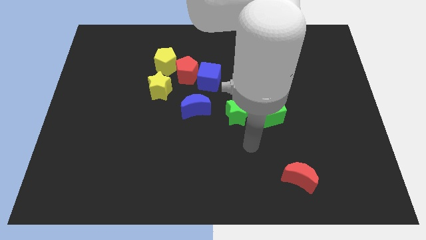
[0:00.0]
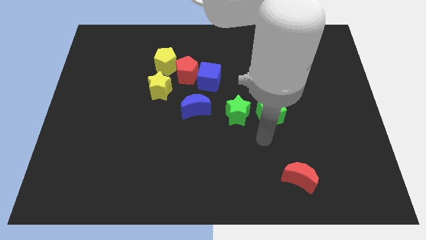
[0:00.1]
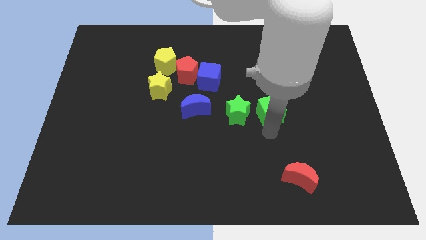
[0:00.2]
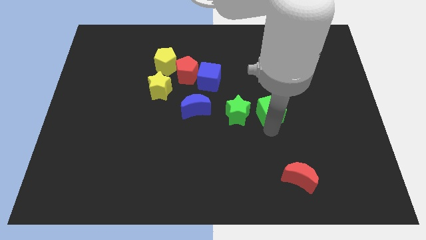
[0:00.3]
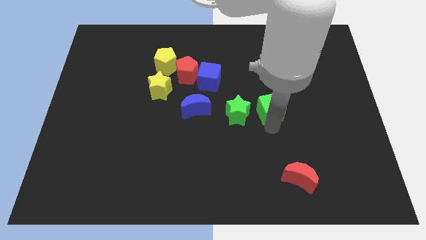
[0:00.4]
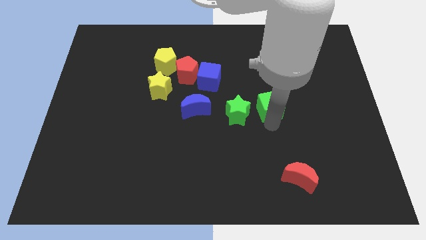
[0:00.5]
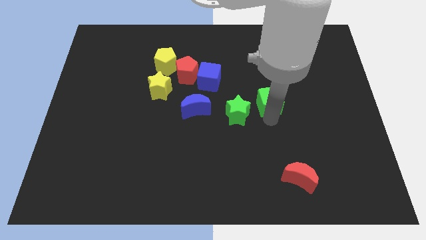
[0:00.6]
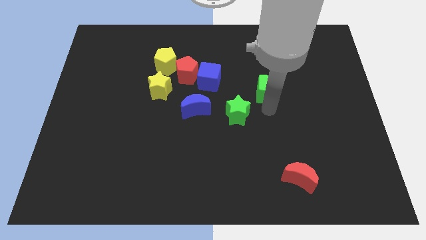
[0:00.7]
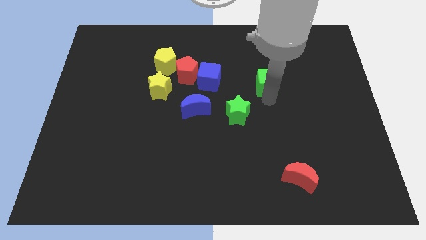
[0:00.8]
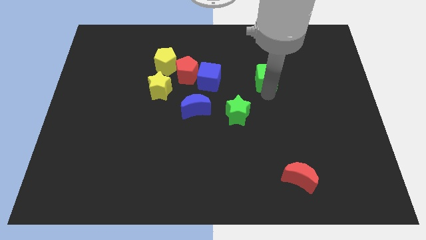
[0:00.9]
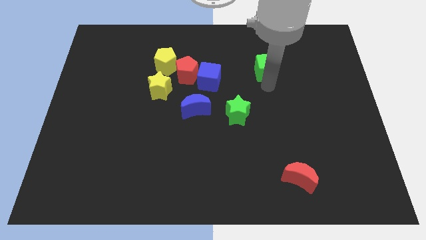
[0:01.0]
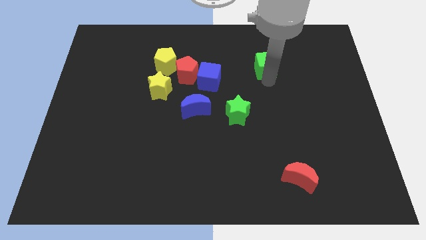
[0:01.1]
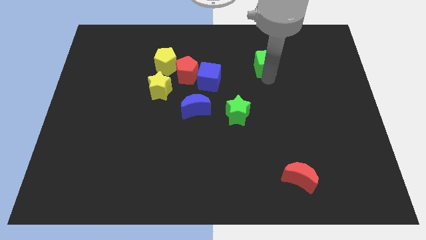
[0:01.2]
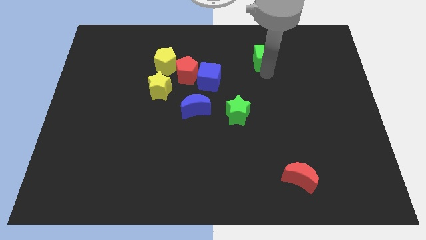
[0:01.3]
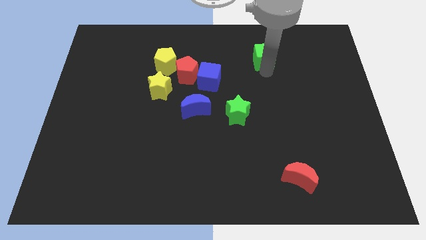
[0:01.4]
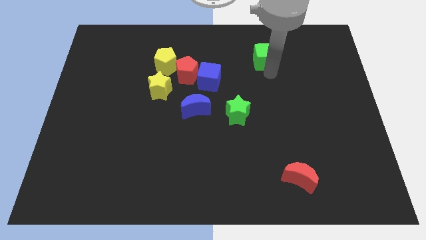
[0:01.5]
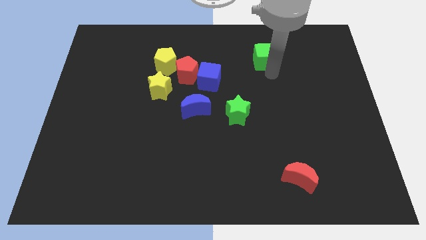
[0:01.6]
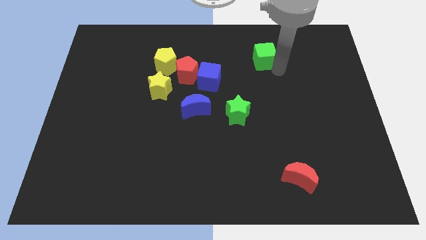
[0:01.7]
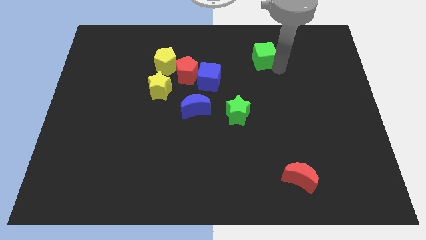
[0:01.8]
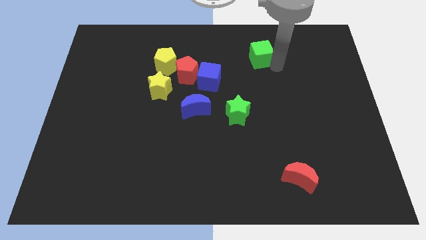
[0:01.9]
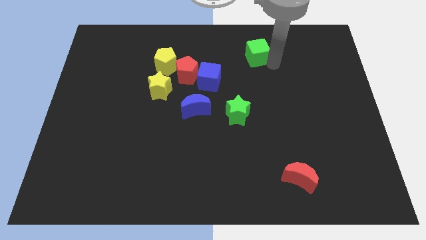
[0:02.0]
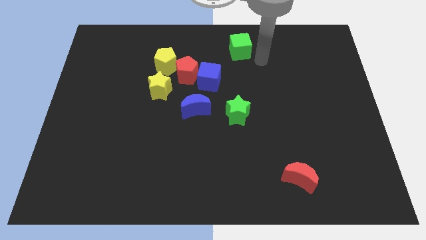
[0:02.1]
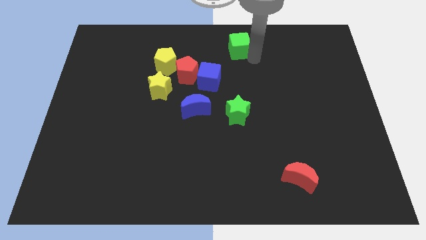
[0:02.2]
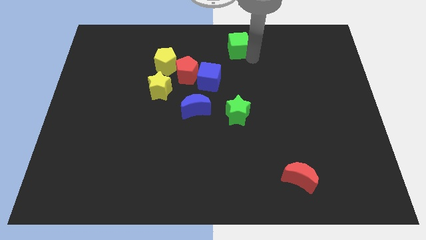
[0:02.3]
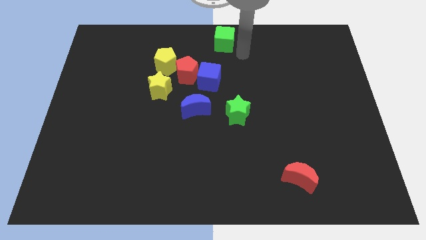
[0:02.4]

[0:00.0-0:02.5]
place the green cube at the top center of the board

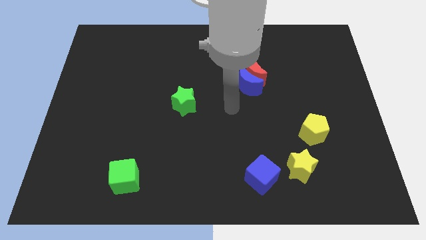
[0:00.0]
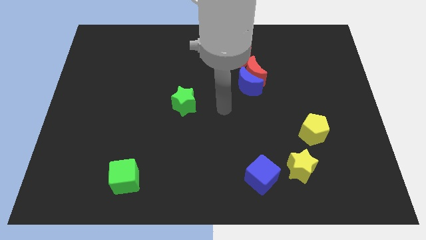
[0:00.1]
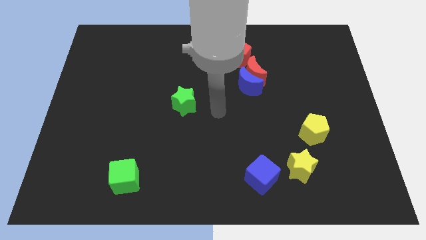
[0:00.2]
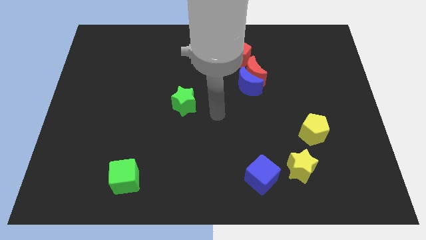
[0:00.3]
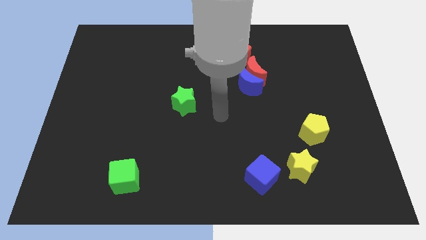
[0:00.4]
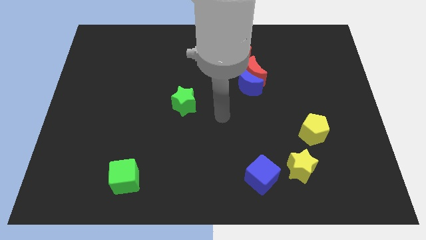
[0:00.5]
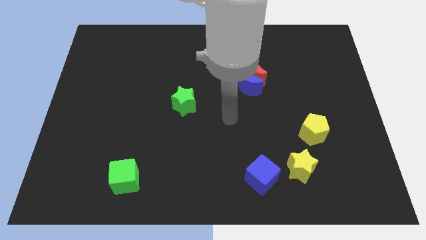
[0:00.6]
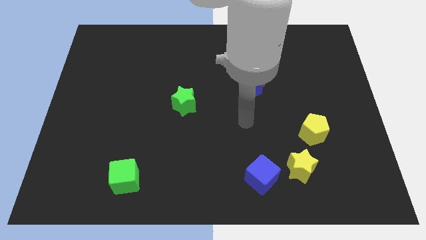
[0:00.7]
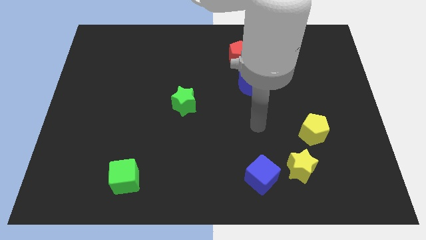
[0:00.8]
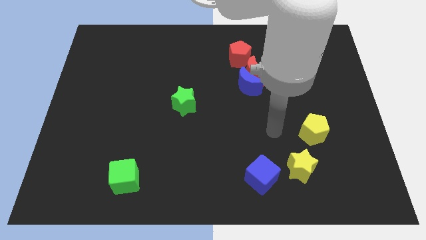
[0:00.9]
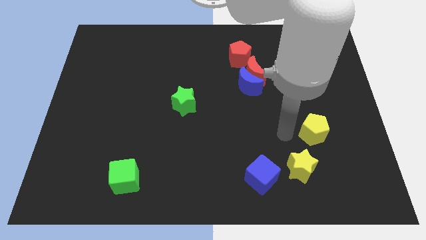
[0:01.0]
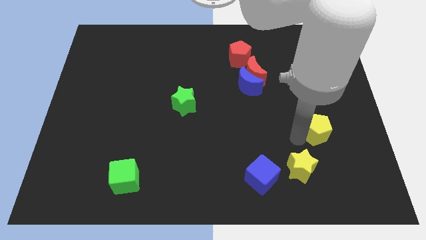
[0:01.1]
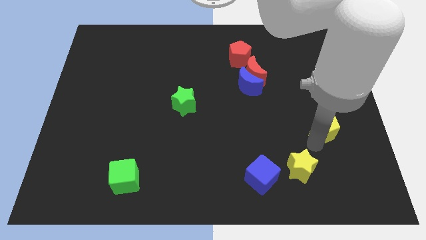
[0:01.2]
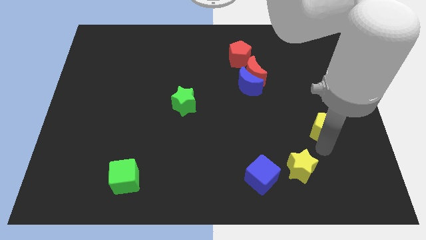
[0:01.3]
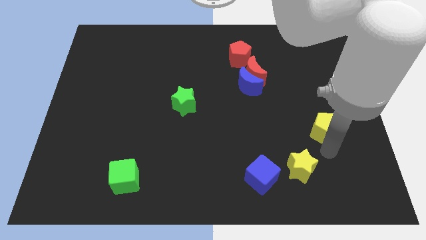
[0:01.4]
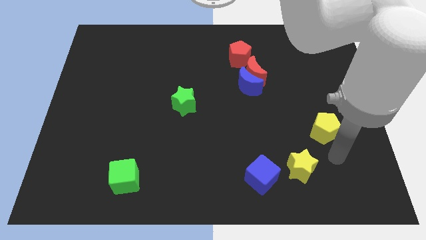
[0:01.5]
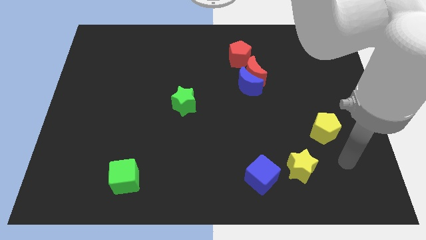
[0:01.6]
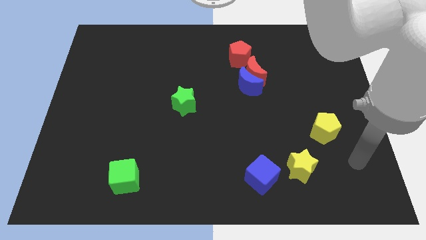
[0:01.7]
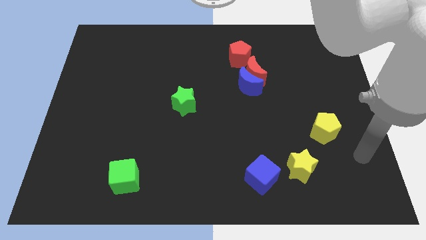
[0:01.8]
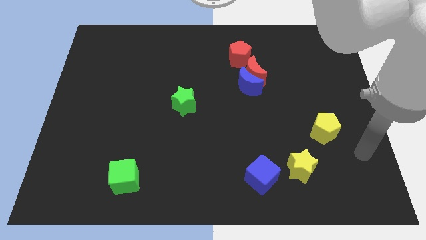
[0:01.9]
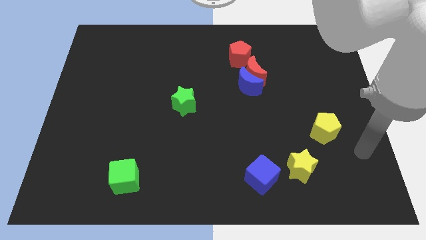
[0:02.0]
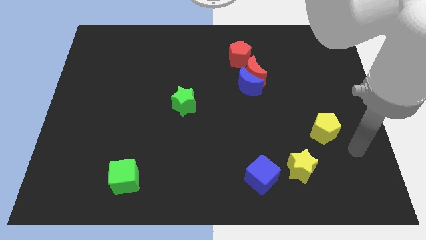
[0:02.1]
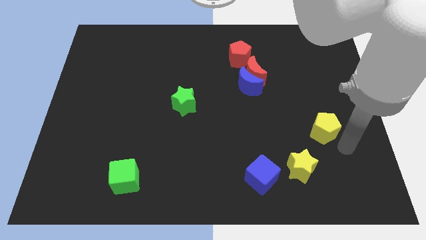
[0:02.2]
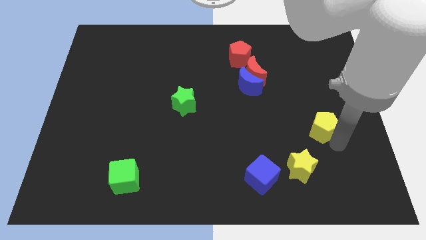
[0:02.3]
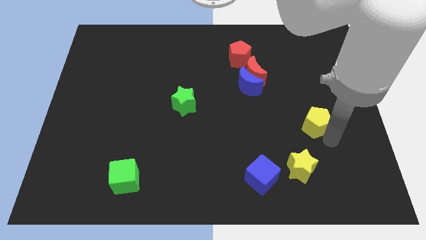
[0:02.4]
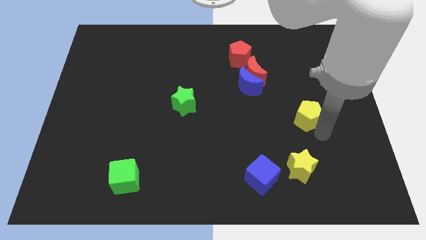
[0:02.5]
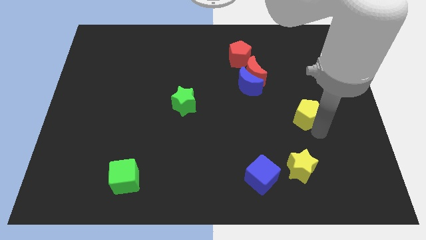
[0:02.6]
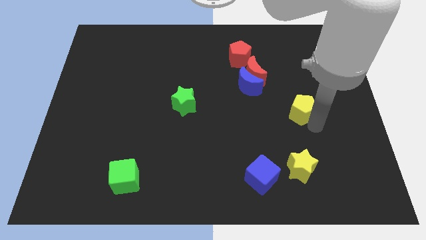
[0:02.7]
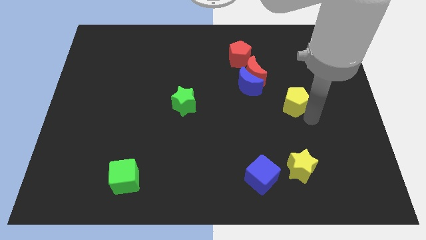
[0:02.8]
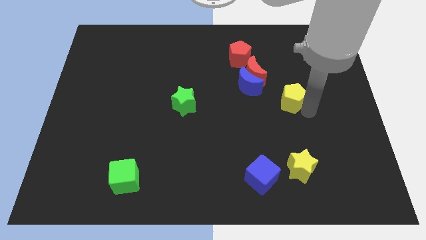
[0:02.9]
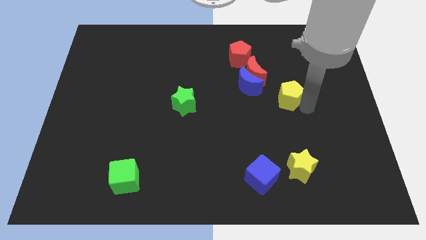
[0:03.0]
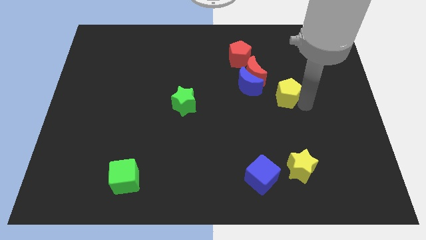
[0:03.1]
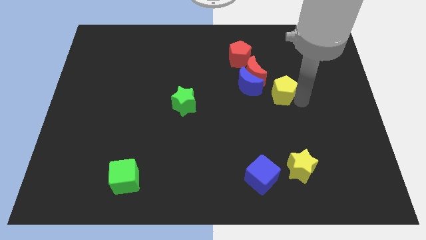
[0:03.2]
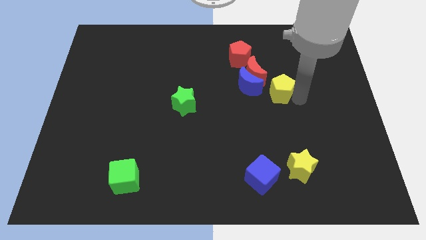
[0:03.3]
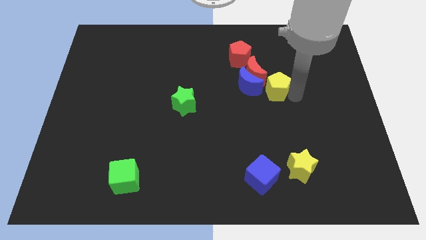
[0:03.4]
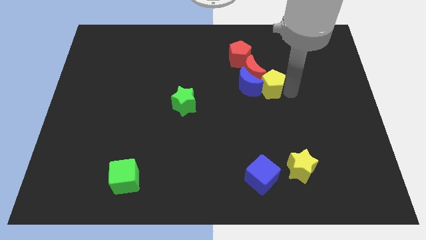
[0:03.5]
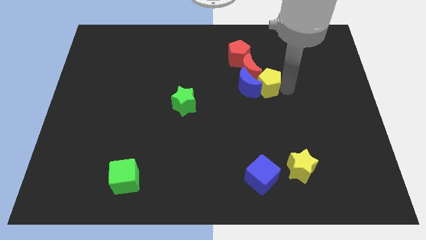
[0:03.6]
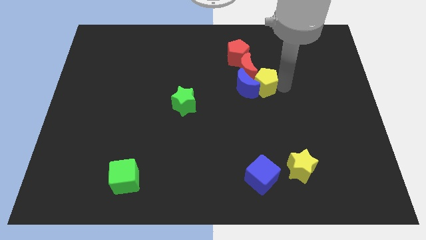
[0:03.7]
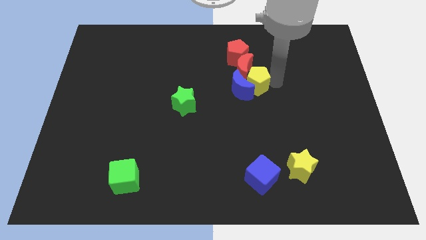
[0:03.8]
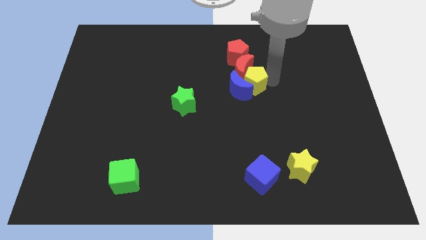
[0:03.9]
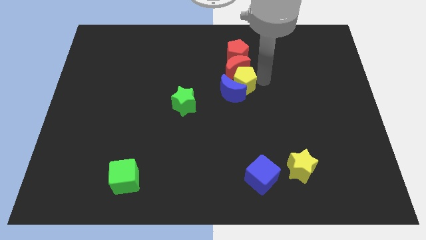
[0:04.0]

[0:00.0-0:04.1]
move the yellow pentagon into blue moon

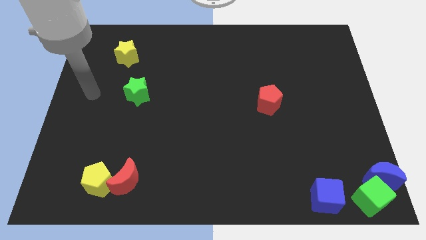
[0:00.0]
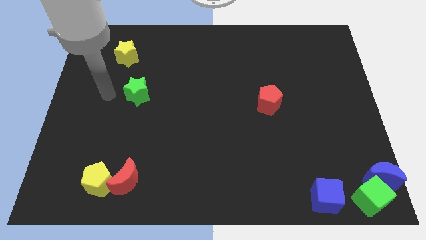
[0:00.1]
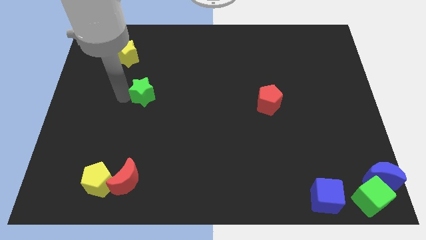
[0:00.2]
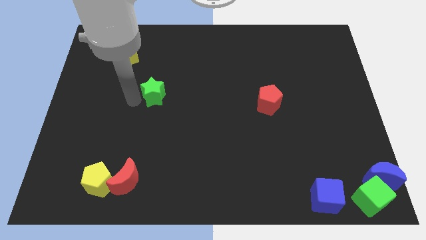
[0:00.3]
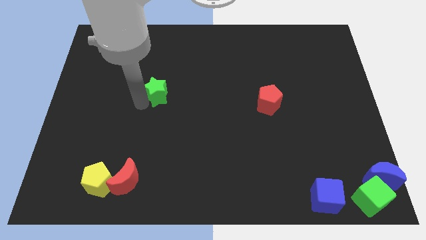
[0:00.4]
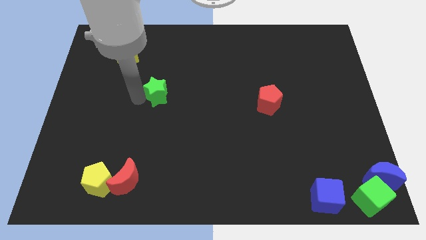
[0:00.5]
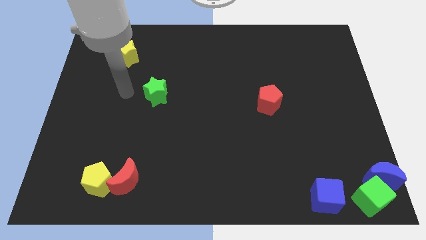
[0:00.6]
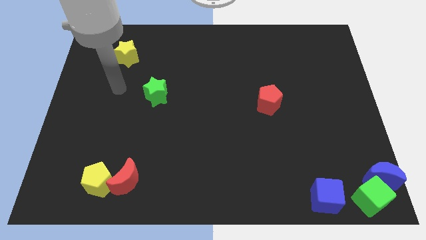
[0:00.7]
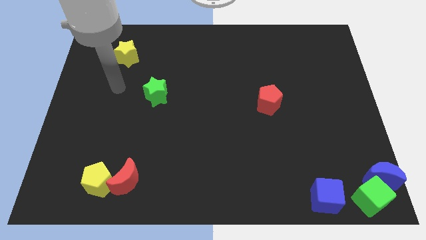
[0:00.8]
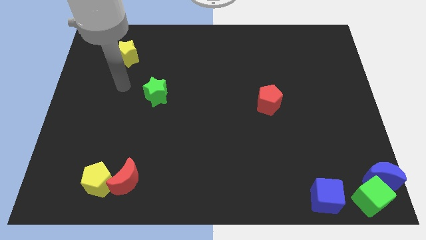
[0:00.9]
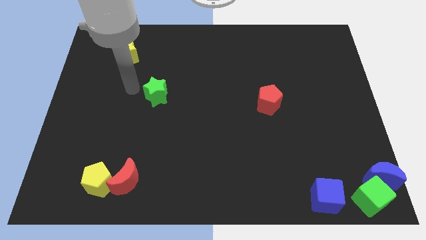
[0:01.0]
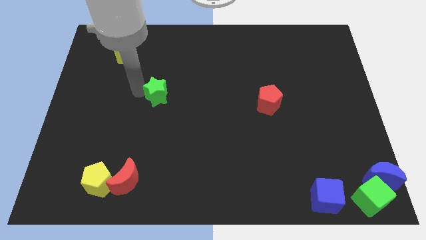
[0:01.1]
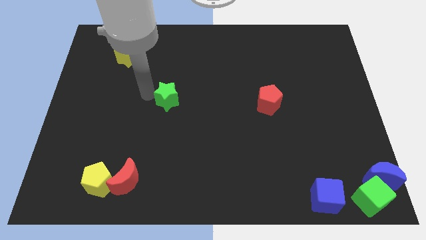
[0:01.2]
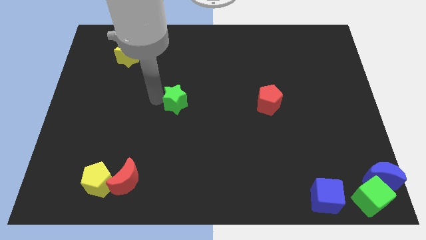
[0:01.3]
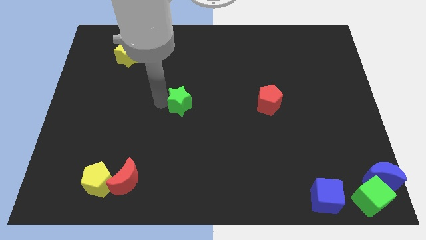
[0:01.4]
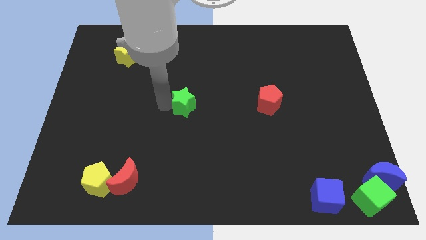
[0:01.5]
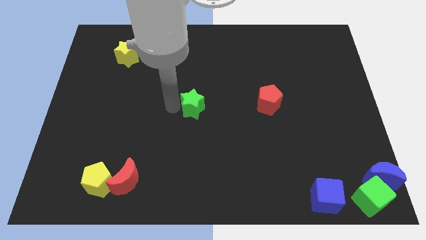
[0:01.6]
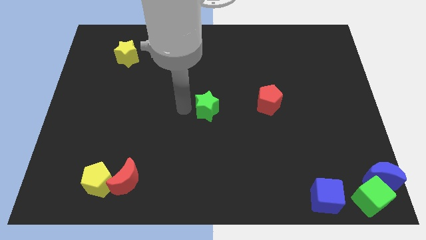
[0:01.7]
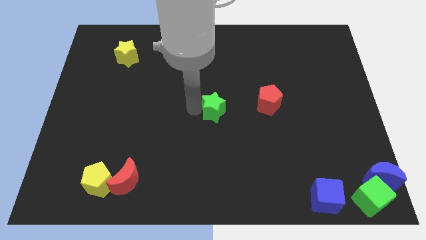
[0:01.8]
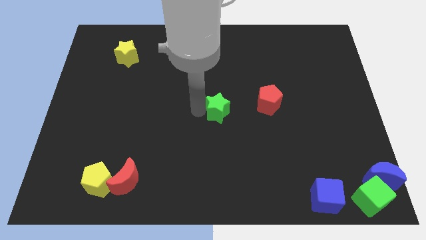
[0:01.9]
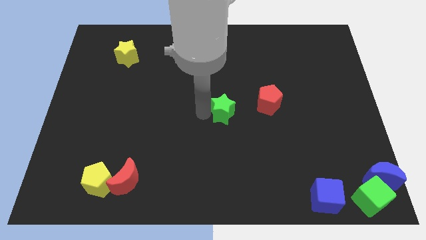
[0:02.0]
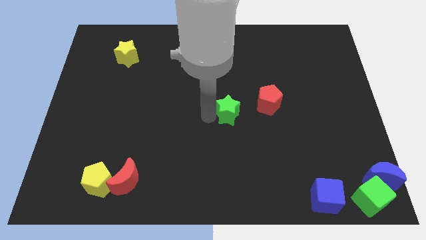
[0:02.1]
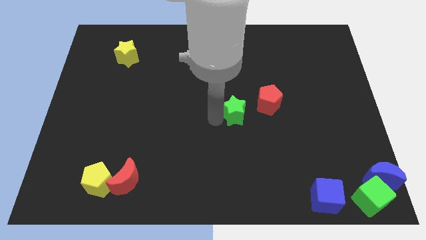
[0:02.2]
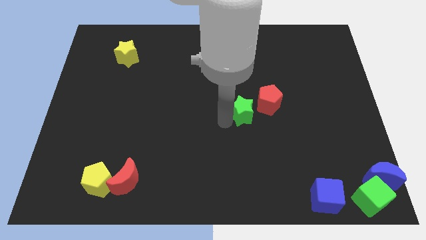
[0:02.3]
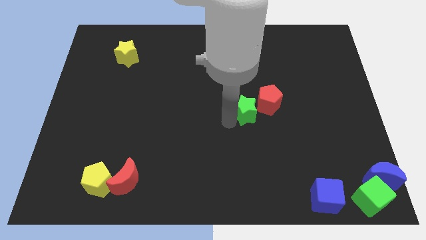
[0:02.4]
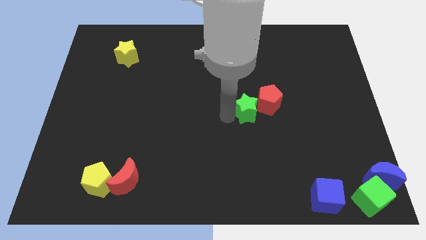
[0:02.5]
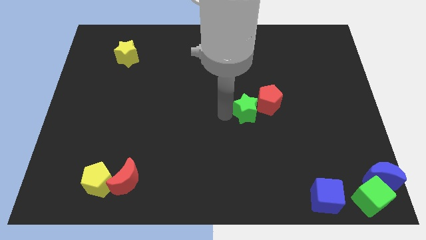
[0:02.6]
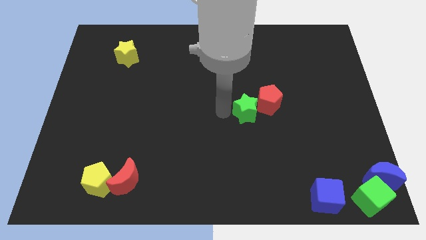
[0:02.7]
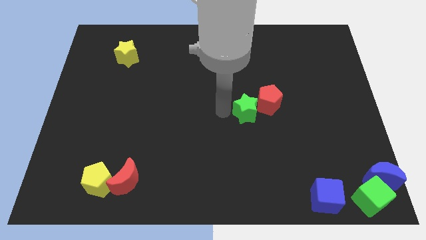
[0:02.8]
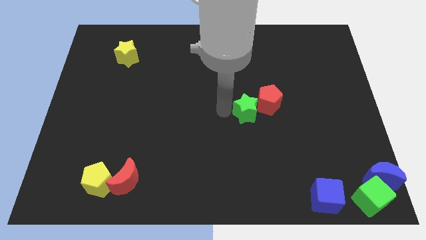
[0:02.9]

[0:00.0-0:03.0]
move the green star close to the red pentagon
